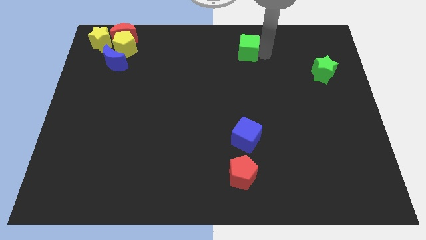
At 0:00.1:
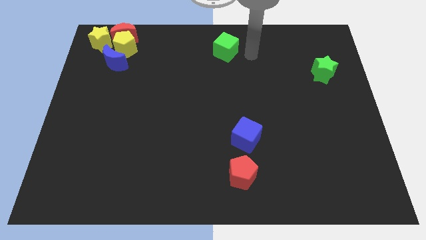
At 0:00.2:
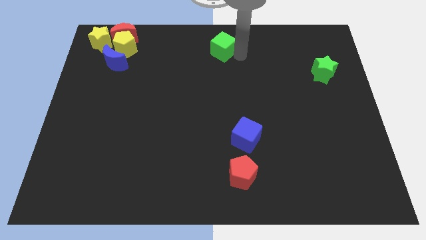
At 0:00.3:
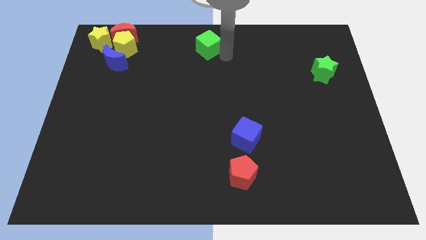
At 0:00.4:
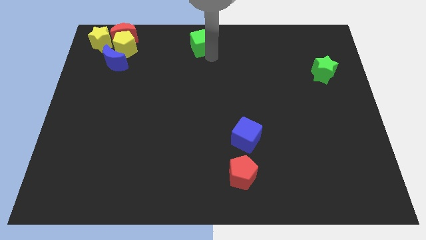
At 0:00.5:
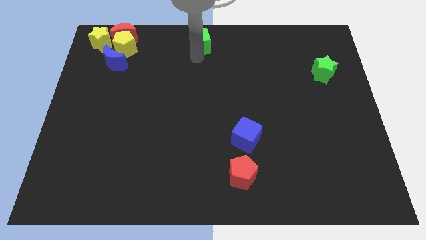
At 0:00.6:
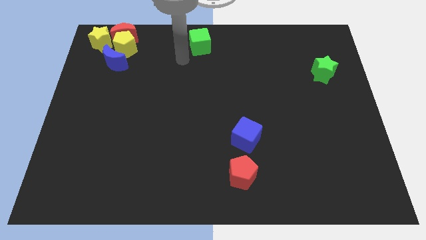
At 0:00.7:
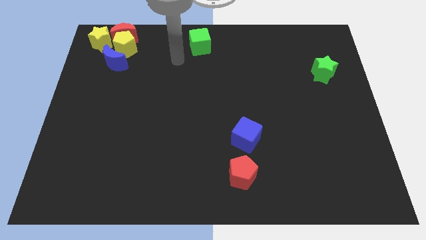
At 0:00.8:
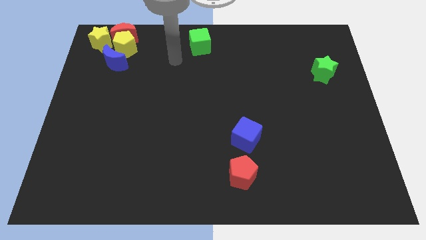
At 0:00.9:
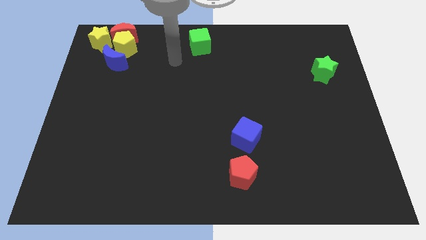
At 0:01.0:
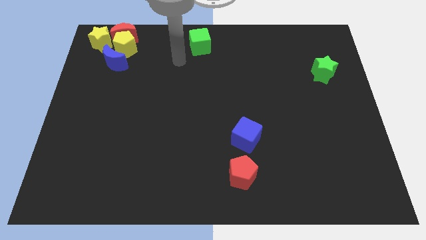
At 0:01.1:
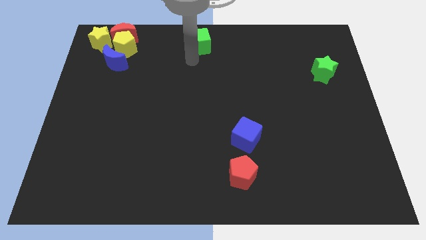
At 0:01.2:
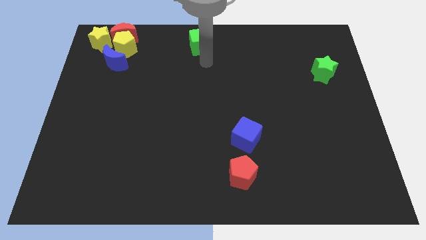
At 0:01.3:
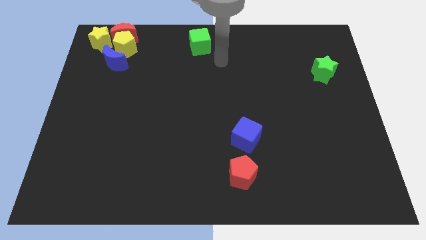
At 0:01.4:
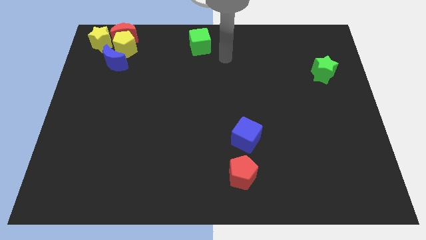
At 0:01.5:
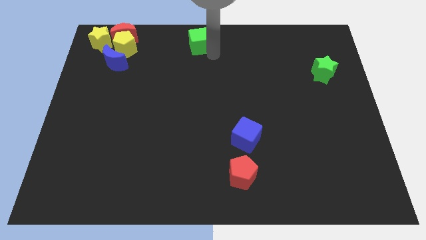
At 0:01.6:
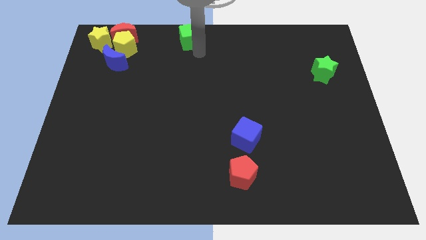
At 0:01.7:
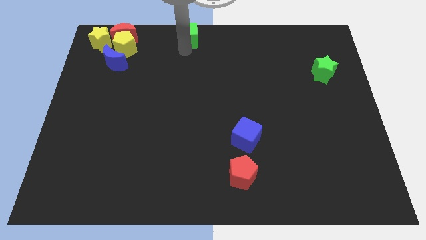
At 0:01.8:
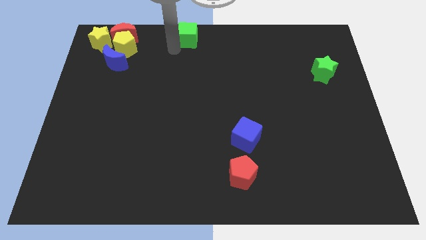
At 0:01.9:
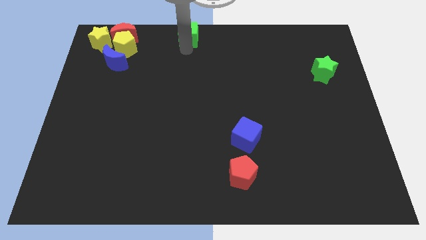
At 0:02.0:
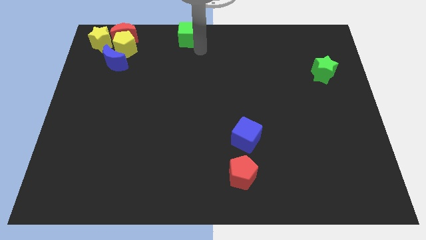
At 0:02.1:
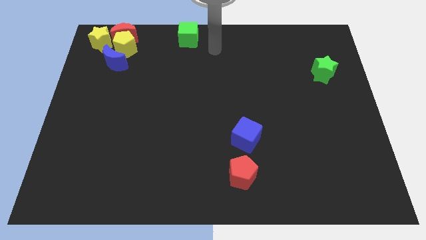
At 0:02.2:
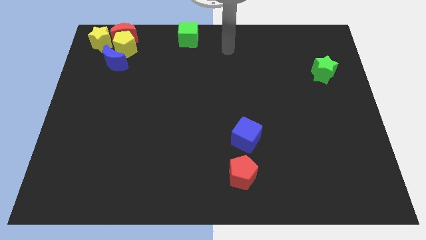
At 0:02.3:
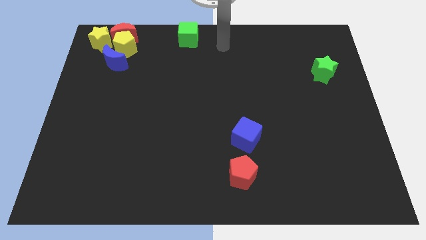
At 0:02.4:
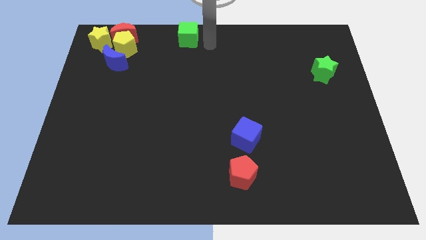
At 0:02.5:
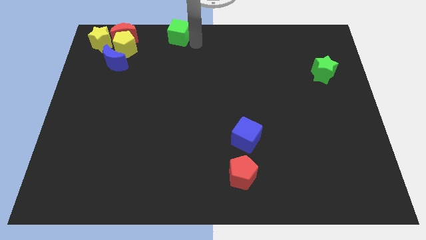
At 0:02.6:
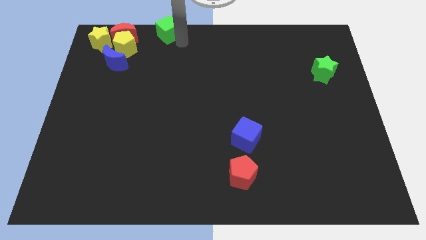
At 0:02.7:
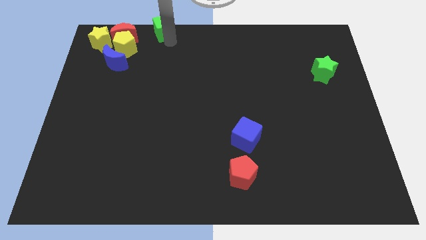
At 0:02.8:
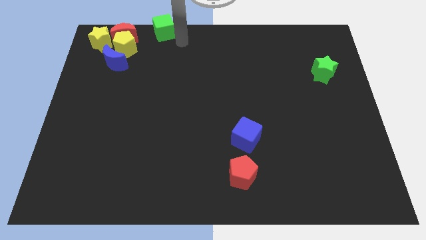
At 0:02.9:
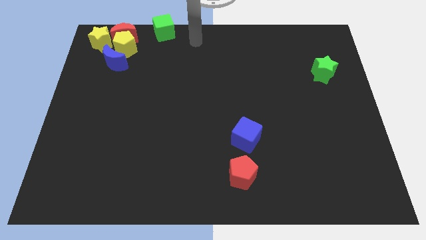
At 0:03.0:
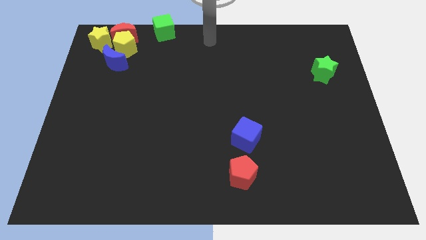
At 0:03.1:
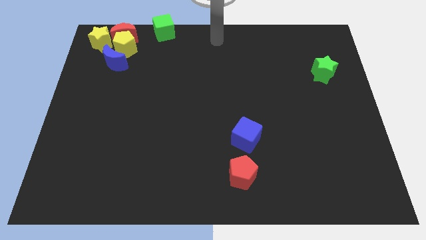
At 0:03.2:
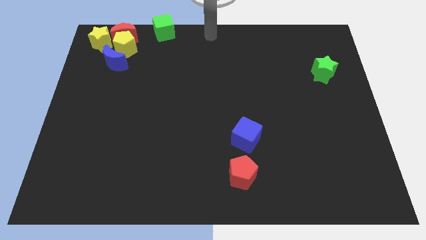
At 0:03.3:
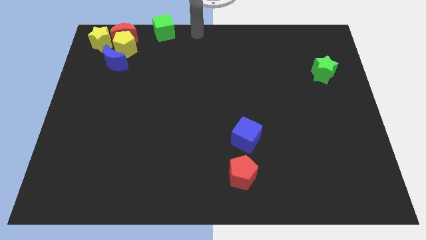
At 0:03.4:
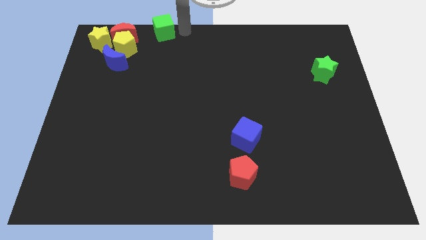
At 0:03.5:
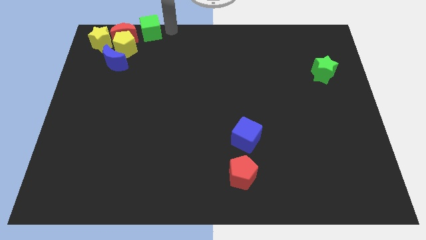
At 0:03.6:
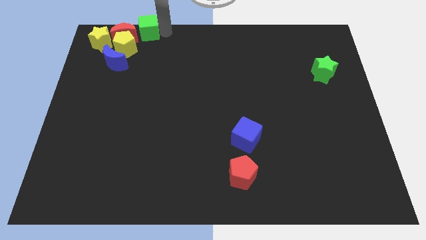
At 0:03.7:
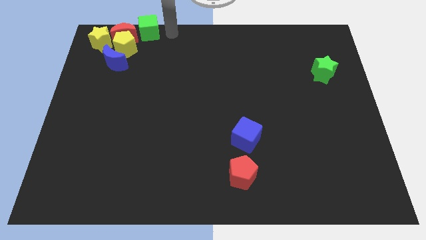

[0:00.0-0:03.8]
move the green cube near to the right side of the red crescent

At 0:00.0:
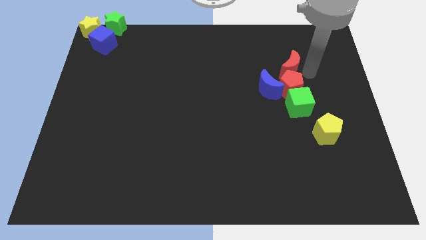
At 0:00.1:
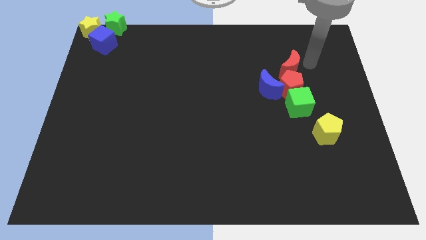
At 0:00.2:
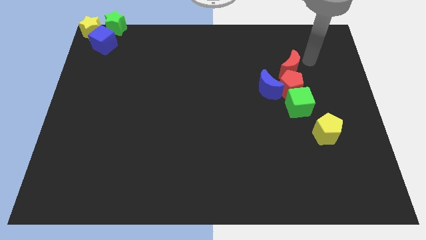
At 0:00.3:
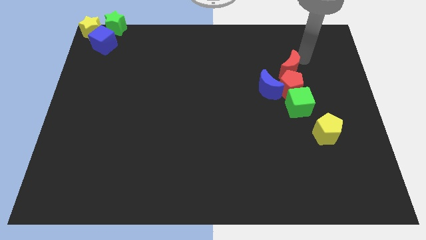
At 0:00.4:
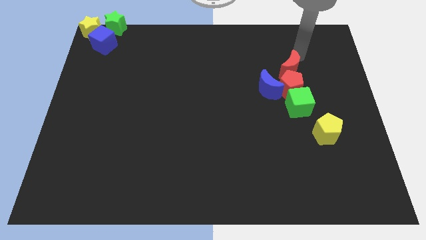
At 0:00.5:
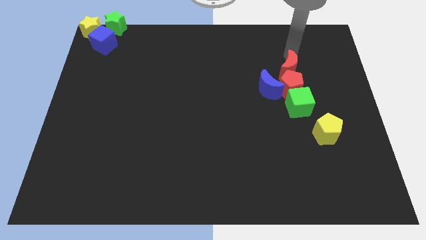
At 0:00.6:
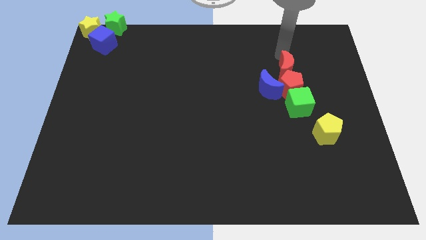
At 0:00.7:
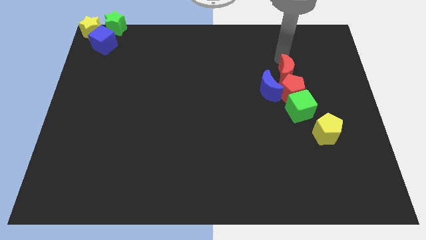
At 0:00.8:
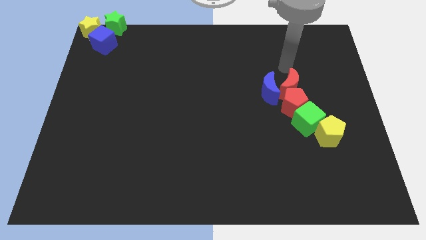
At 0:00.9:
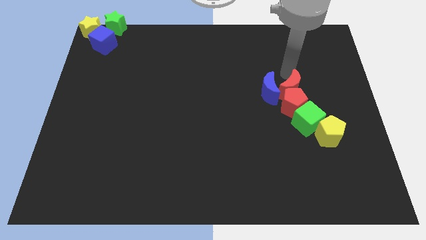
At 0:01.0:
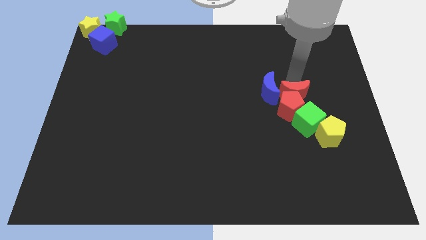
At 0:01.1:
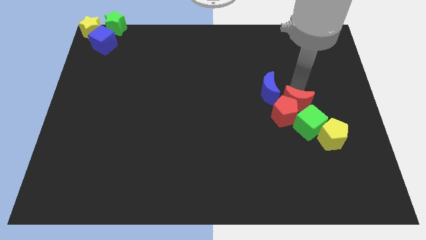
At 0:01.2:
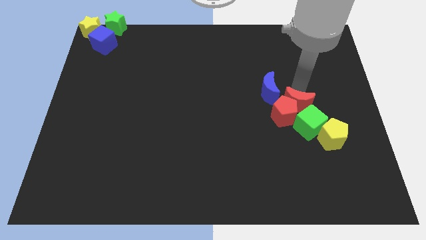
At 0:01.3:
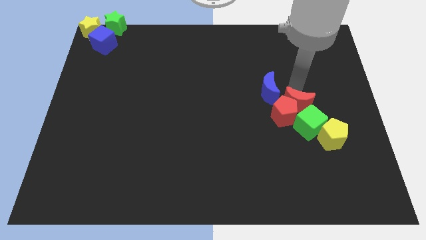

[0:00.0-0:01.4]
push red moon into the red pentagon

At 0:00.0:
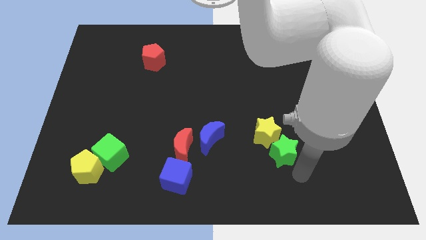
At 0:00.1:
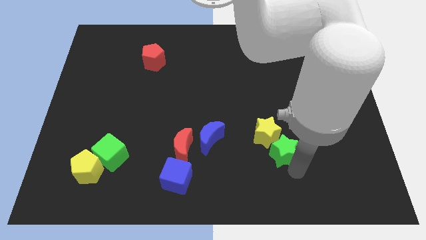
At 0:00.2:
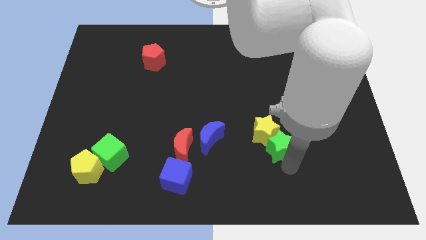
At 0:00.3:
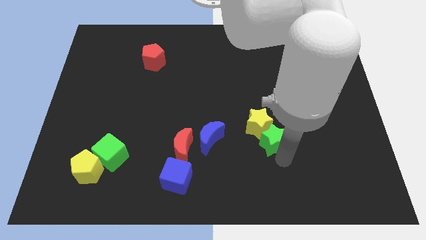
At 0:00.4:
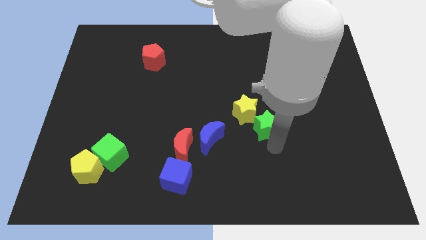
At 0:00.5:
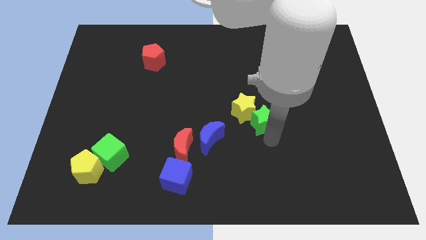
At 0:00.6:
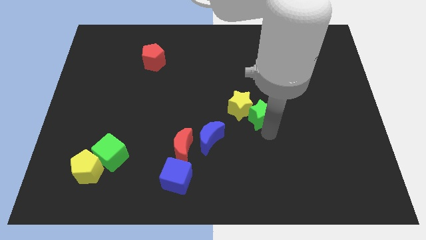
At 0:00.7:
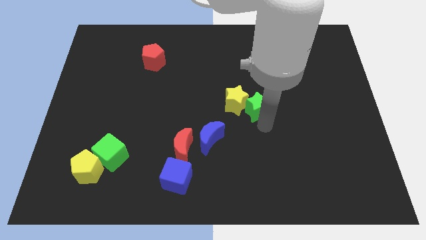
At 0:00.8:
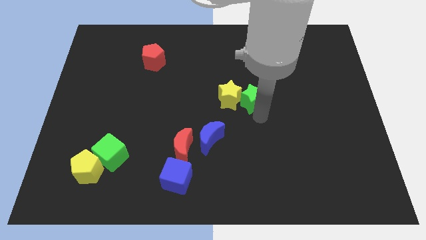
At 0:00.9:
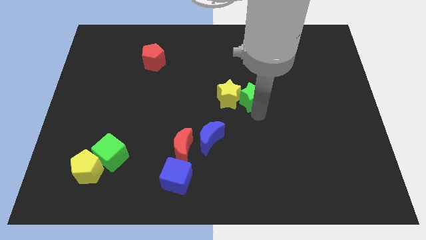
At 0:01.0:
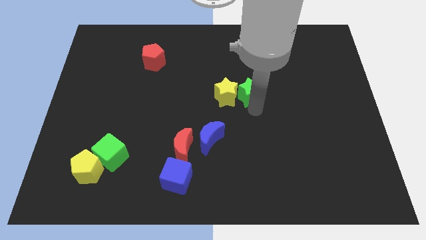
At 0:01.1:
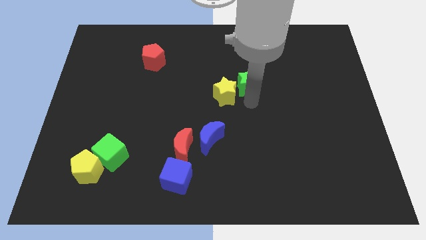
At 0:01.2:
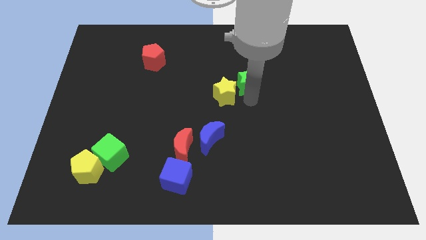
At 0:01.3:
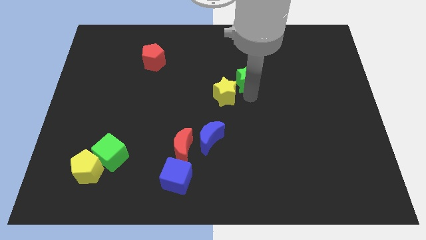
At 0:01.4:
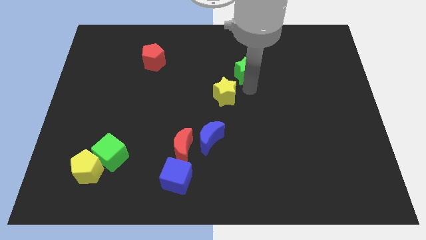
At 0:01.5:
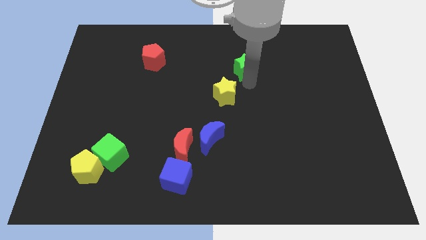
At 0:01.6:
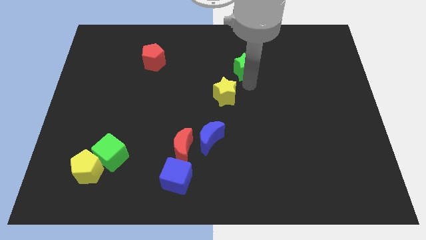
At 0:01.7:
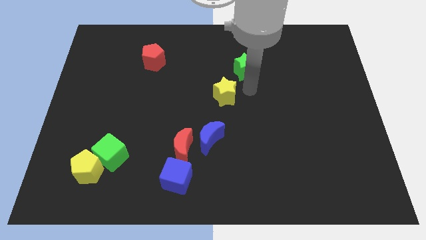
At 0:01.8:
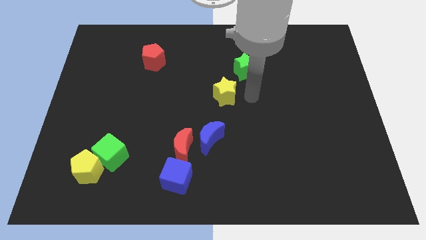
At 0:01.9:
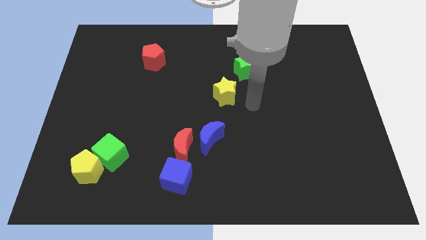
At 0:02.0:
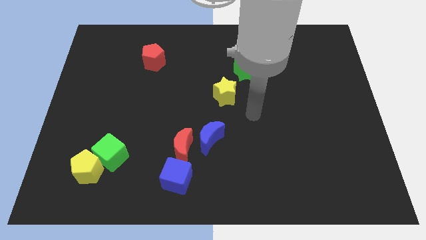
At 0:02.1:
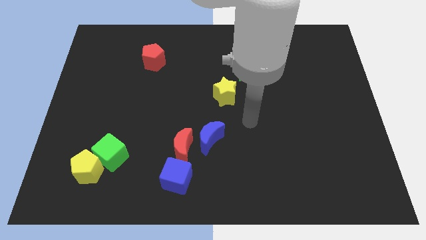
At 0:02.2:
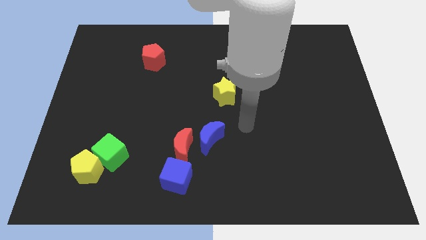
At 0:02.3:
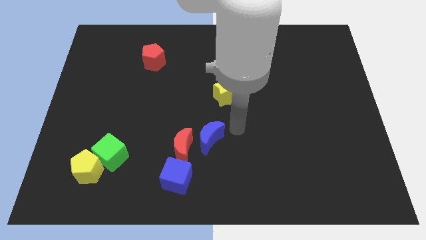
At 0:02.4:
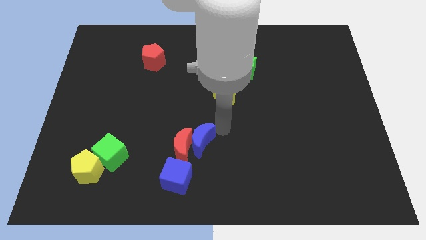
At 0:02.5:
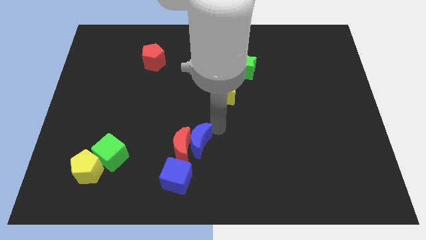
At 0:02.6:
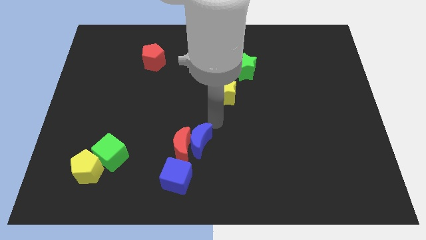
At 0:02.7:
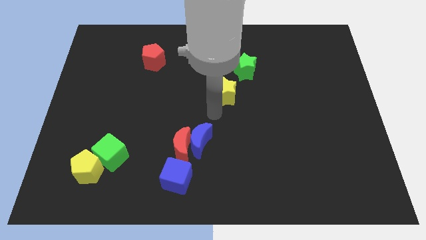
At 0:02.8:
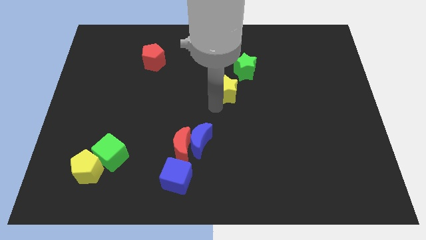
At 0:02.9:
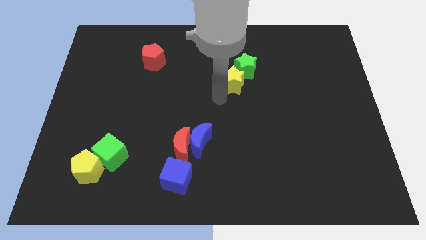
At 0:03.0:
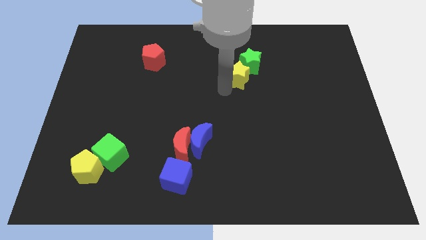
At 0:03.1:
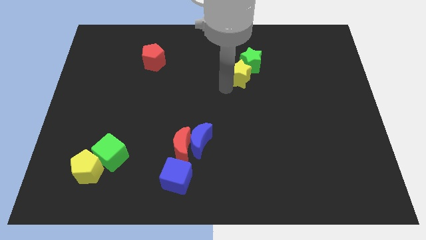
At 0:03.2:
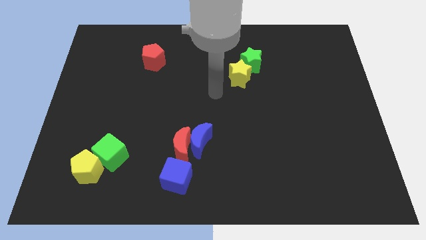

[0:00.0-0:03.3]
push the yellow star and green star to the top side of the table

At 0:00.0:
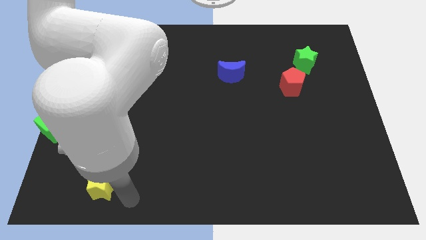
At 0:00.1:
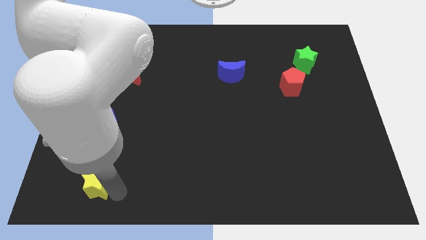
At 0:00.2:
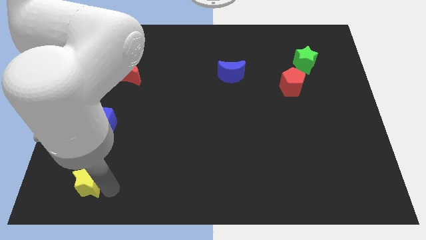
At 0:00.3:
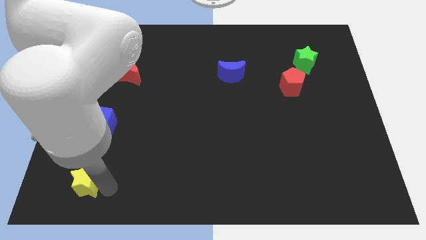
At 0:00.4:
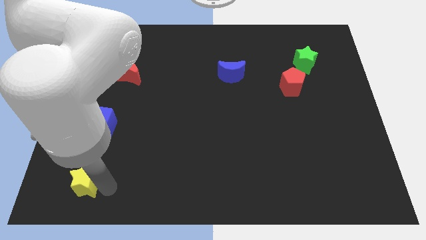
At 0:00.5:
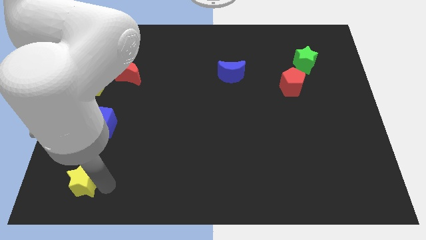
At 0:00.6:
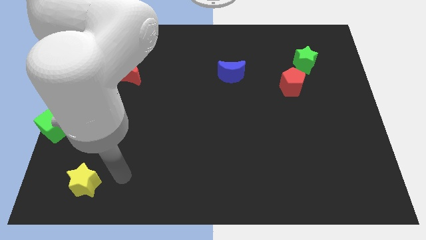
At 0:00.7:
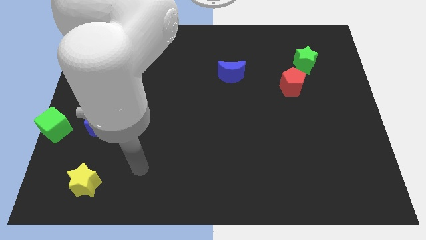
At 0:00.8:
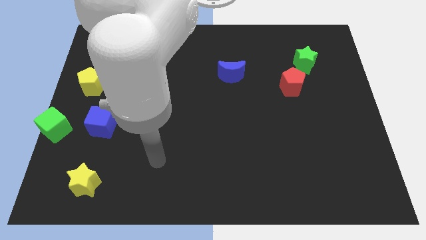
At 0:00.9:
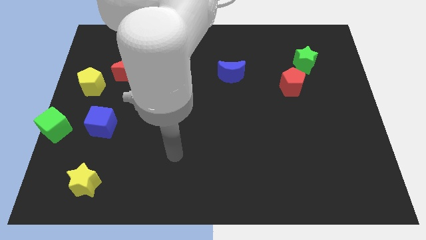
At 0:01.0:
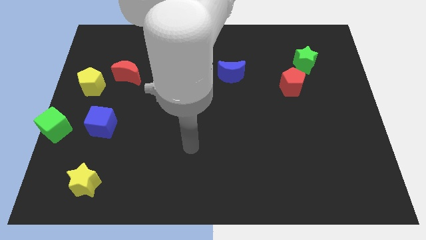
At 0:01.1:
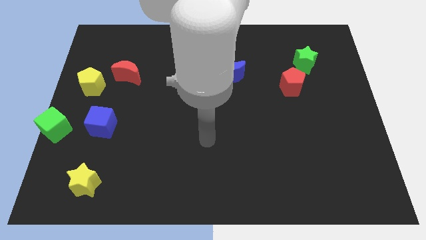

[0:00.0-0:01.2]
place the yellow star to the bottom side of the blue cube
